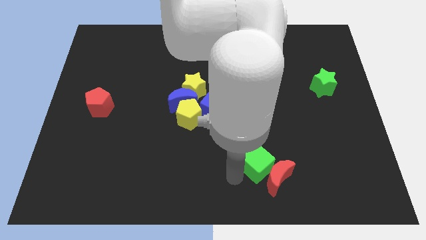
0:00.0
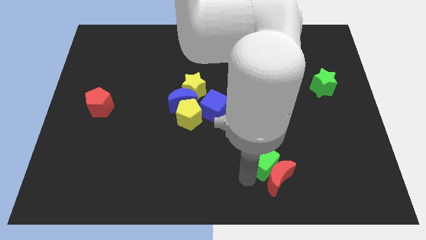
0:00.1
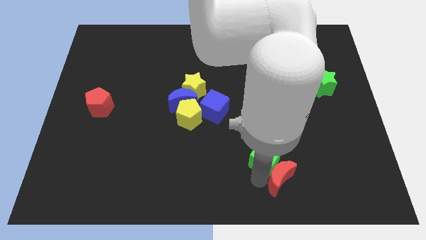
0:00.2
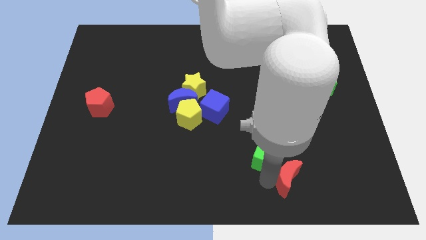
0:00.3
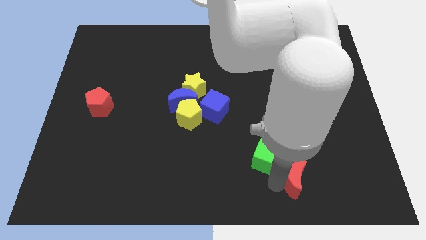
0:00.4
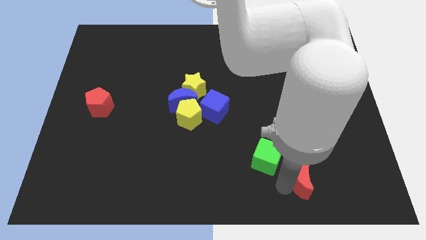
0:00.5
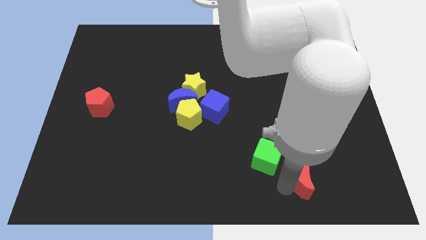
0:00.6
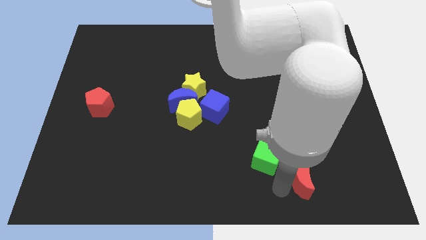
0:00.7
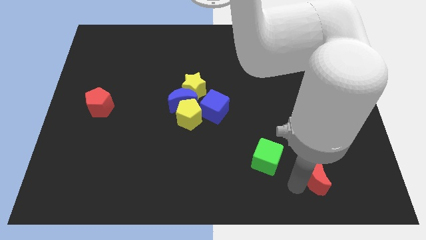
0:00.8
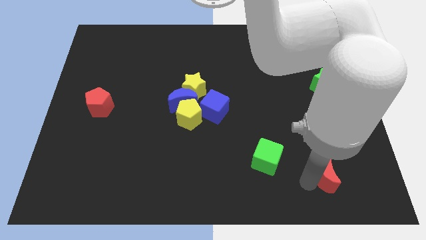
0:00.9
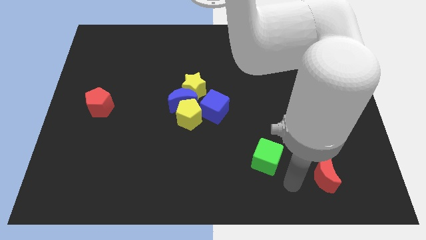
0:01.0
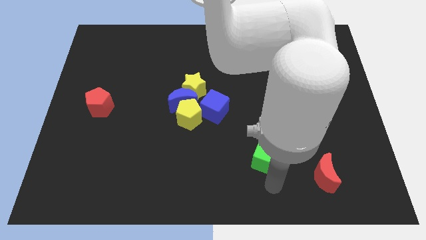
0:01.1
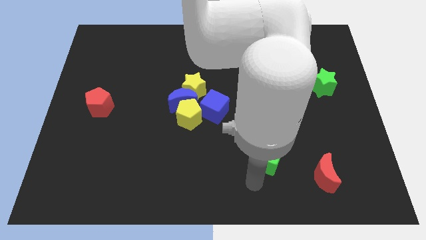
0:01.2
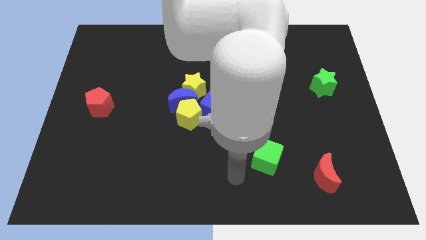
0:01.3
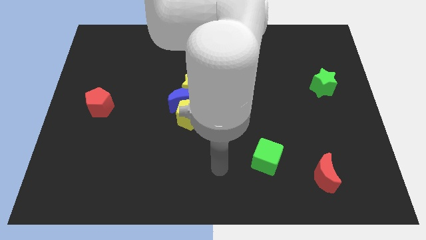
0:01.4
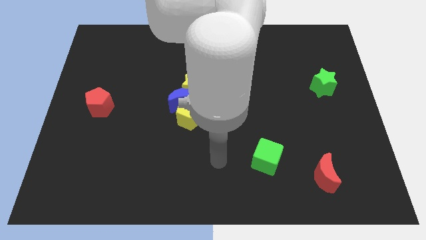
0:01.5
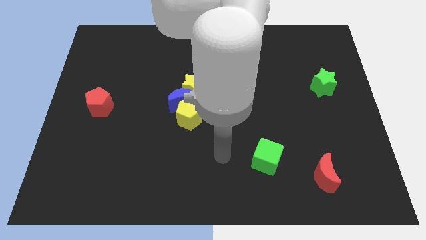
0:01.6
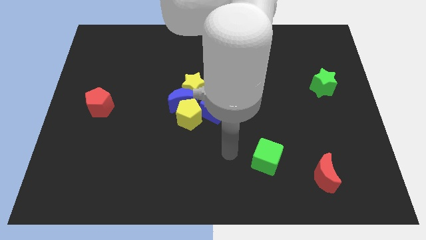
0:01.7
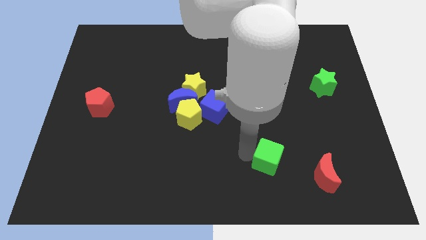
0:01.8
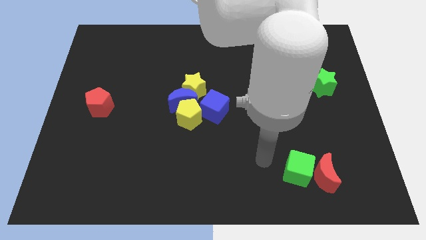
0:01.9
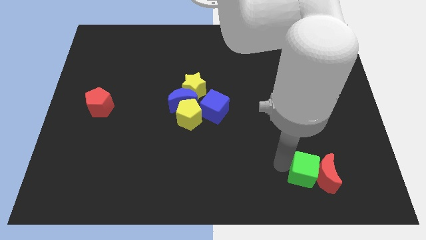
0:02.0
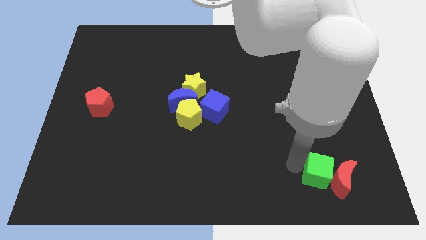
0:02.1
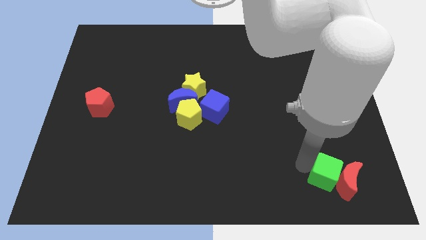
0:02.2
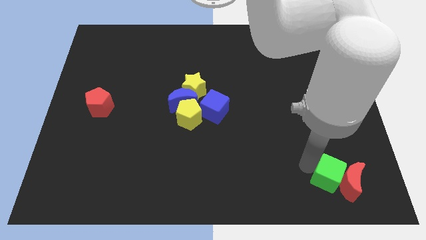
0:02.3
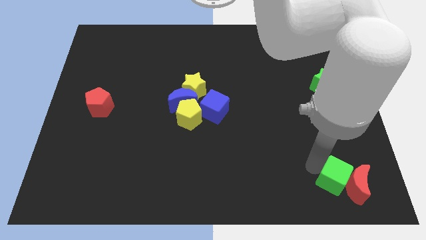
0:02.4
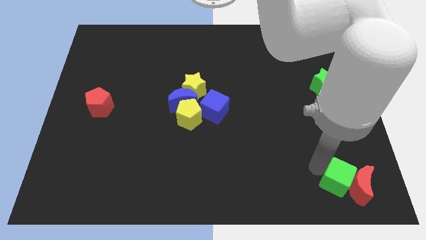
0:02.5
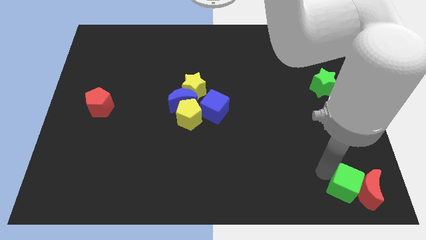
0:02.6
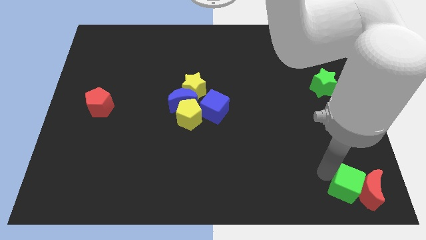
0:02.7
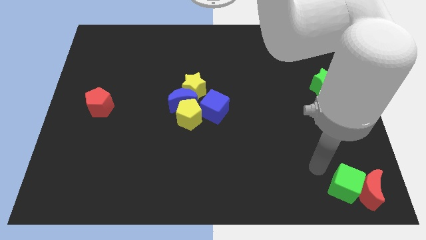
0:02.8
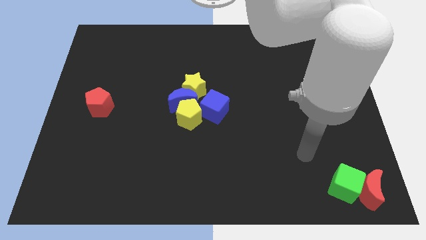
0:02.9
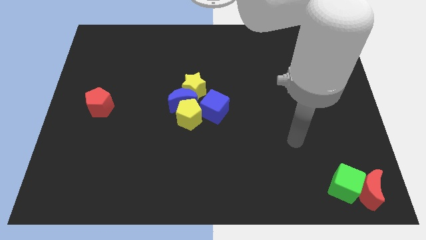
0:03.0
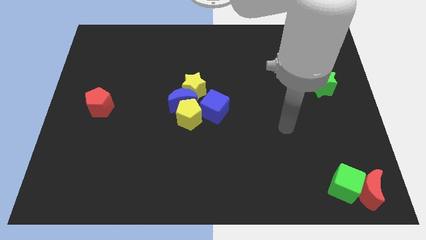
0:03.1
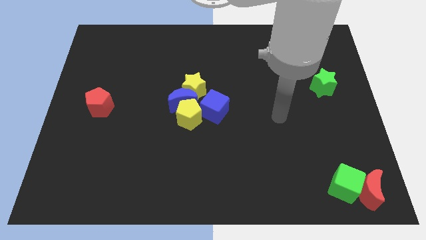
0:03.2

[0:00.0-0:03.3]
push the green cube and the red crescent to the bottom right corner of the board

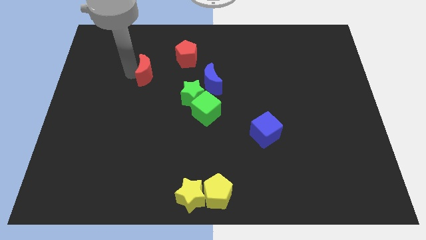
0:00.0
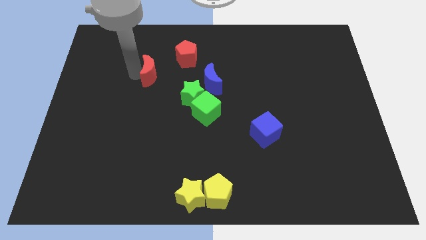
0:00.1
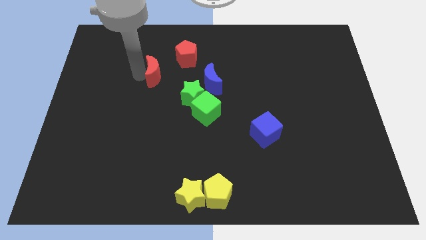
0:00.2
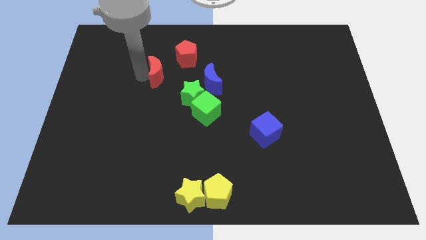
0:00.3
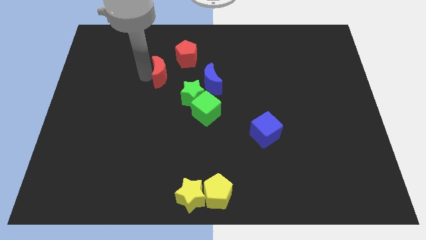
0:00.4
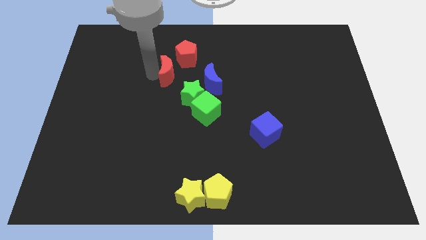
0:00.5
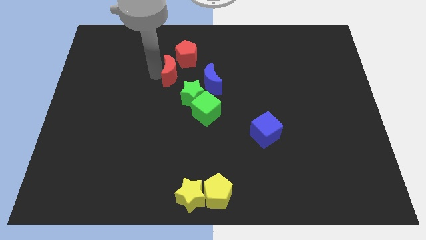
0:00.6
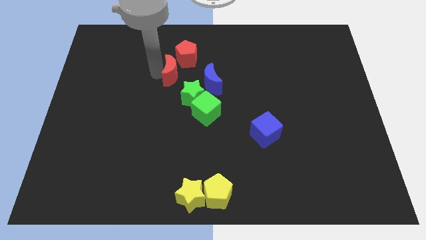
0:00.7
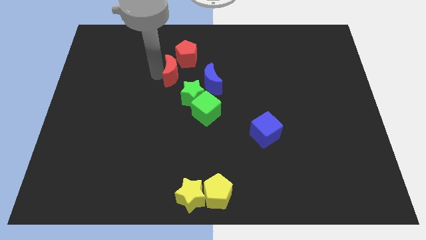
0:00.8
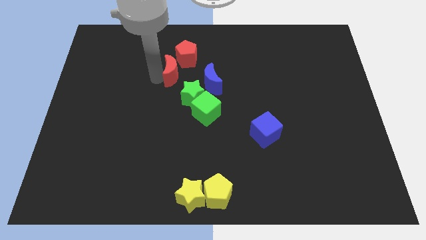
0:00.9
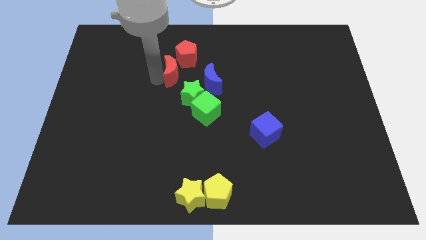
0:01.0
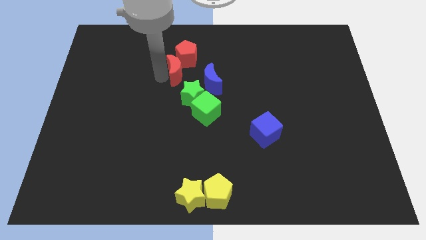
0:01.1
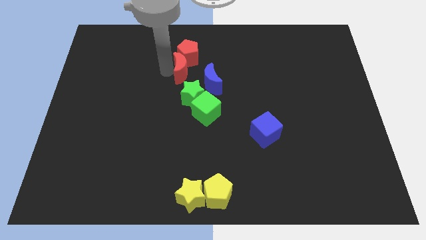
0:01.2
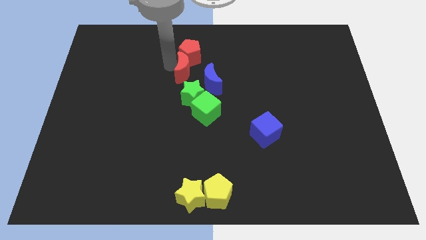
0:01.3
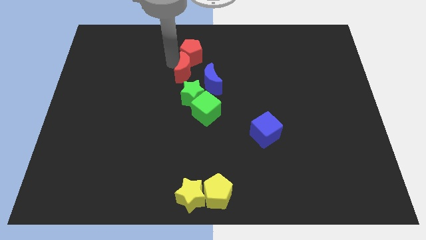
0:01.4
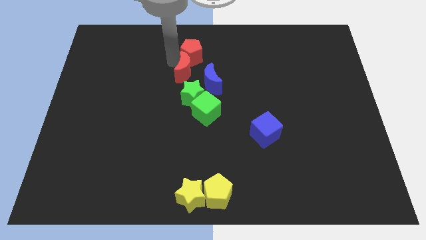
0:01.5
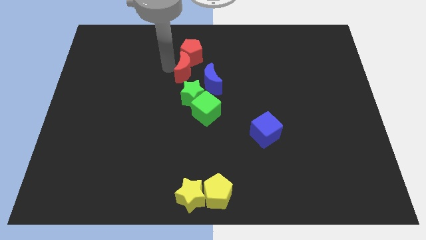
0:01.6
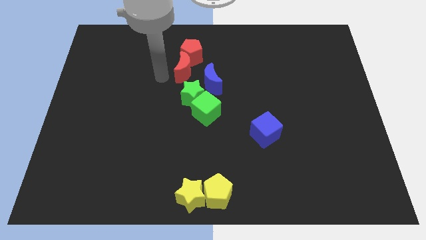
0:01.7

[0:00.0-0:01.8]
move red moon beside red pentagon

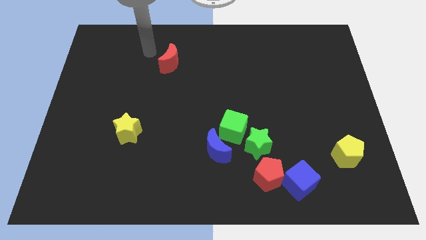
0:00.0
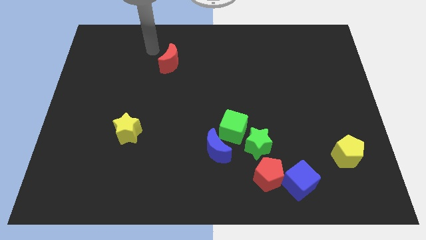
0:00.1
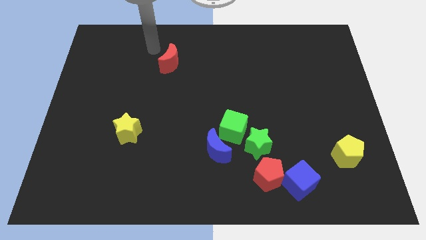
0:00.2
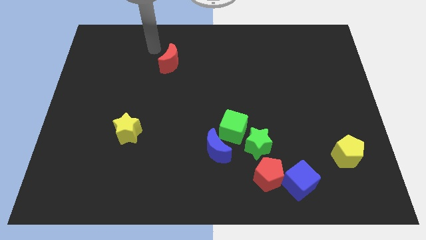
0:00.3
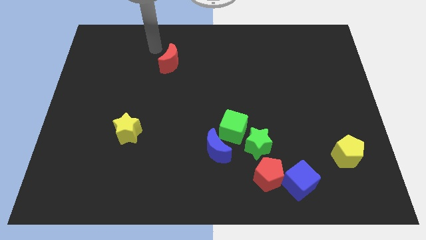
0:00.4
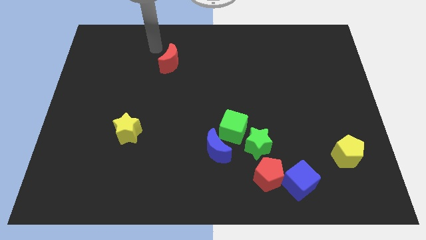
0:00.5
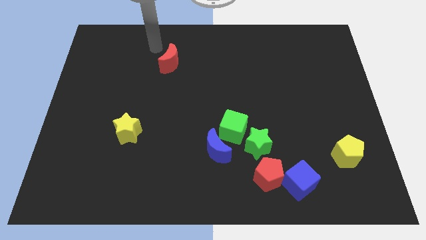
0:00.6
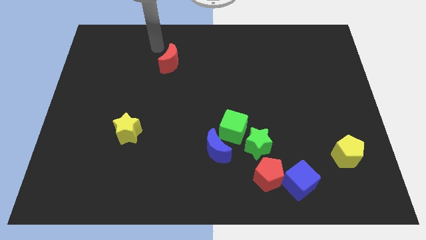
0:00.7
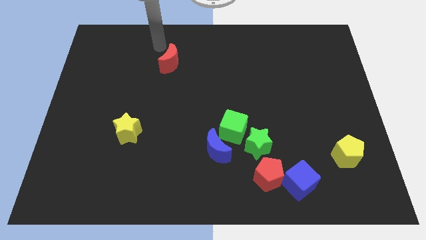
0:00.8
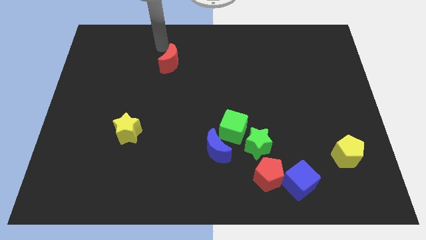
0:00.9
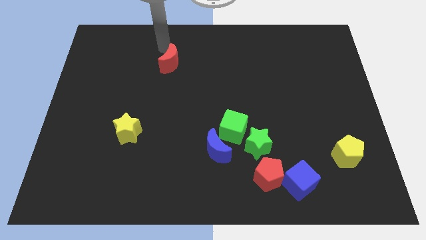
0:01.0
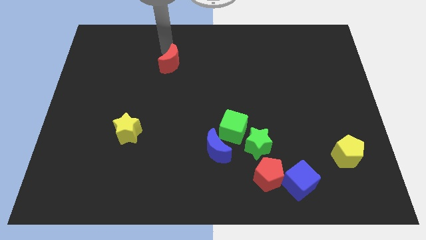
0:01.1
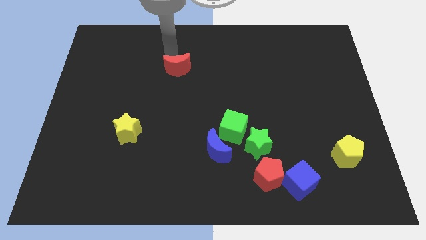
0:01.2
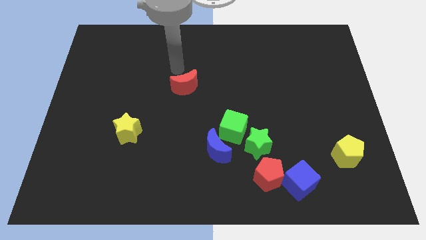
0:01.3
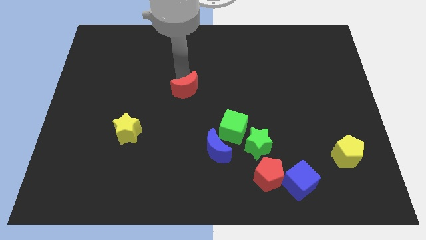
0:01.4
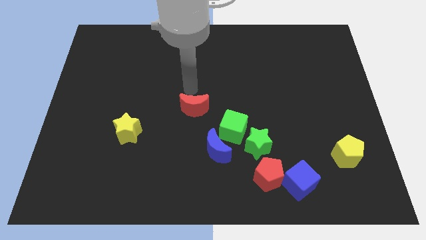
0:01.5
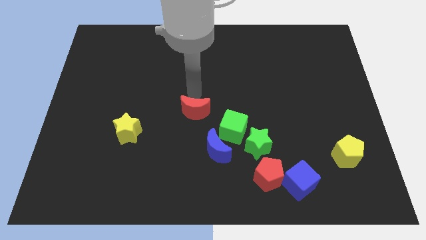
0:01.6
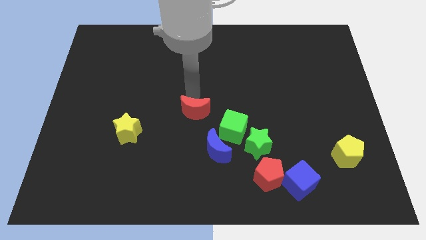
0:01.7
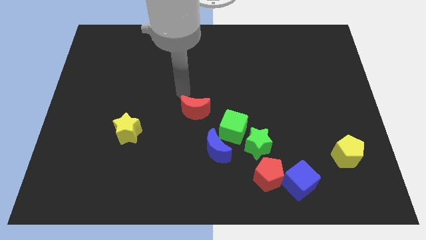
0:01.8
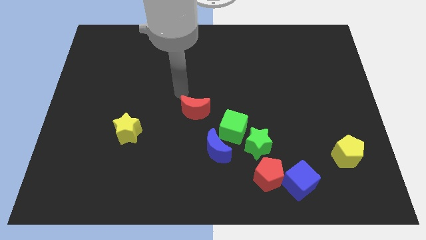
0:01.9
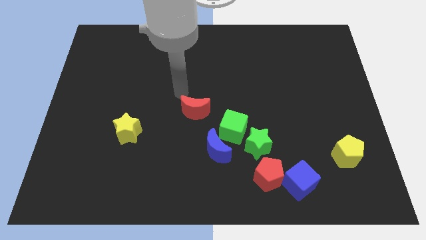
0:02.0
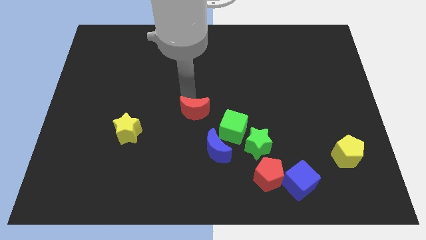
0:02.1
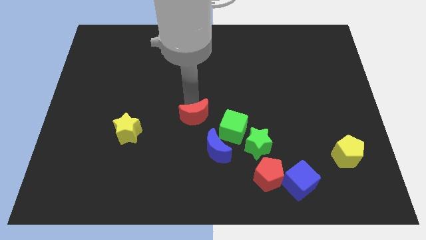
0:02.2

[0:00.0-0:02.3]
push the red moon towards the center of the board

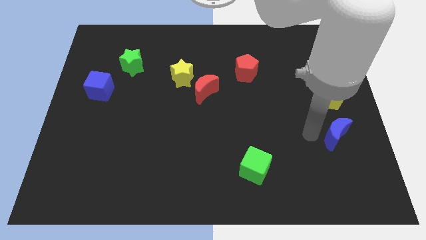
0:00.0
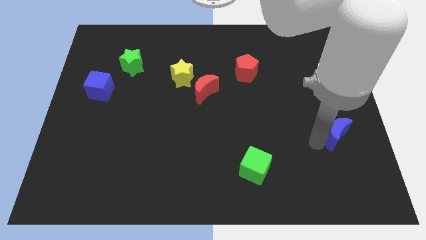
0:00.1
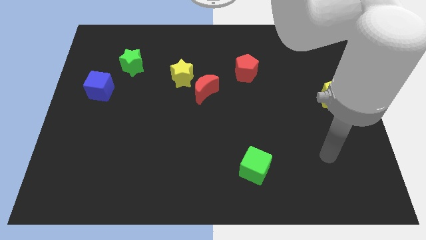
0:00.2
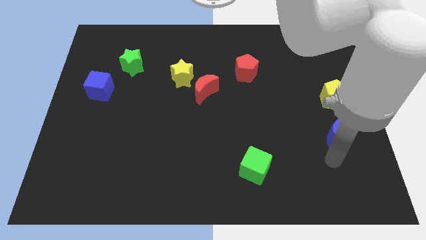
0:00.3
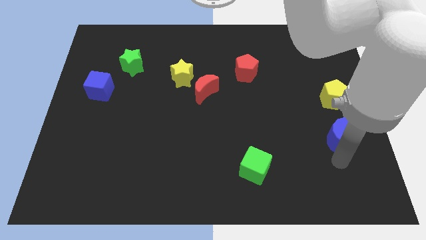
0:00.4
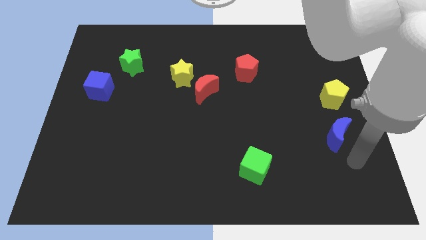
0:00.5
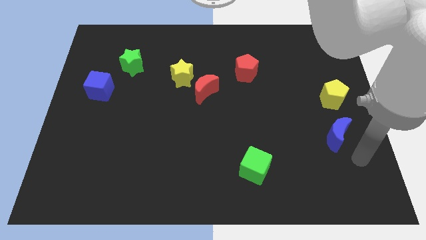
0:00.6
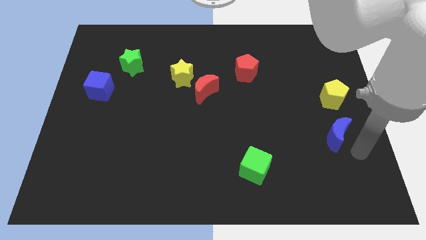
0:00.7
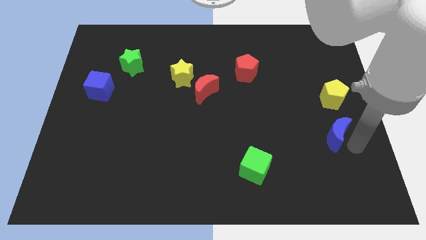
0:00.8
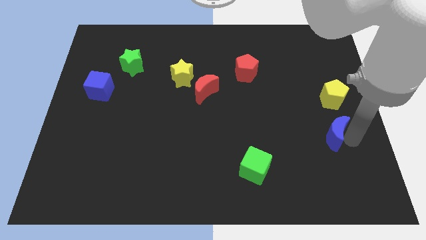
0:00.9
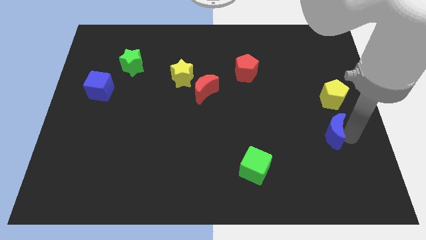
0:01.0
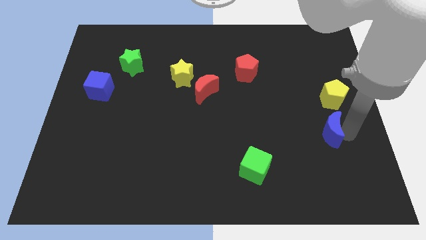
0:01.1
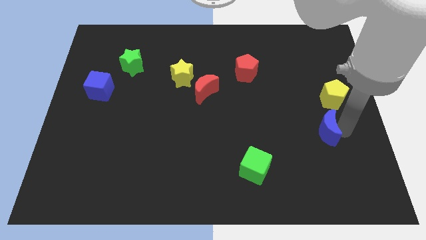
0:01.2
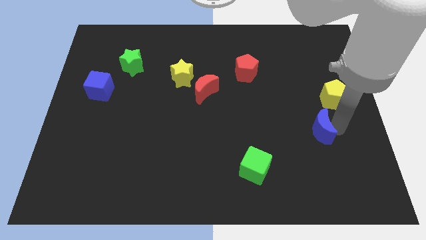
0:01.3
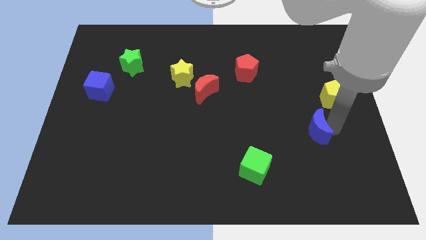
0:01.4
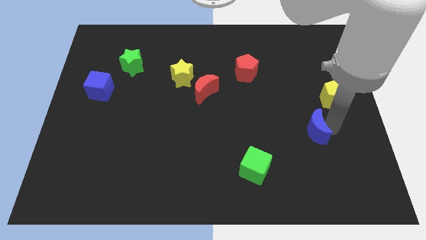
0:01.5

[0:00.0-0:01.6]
move blue moon slightly towards left
